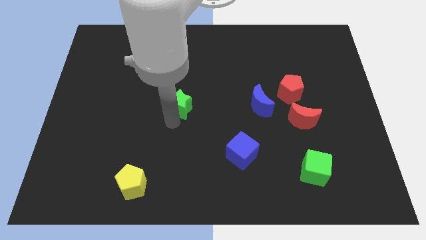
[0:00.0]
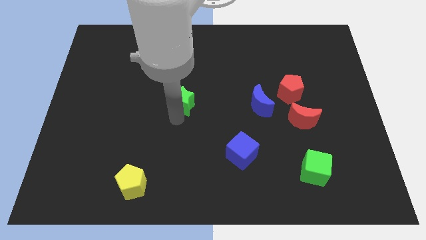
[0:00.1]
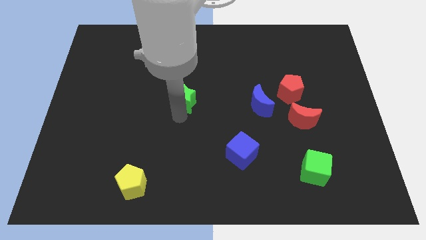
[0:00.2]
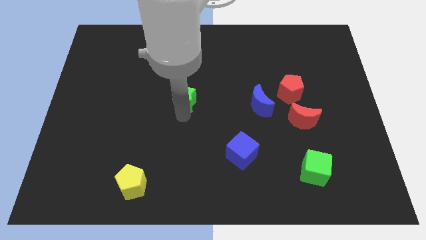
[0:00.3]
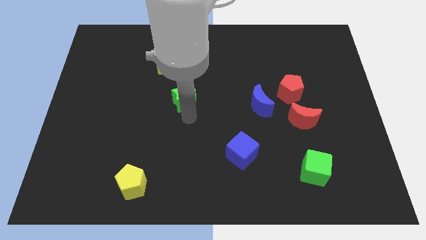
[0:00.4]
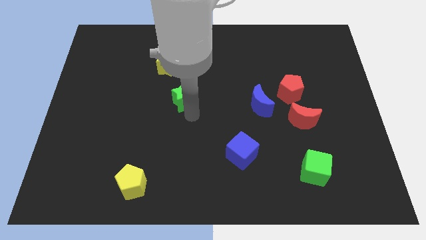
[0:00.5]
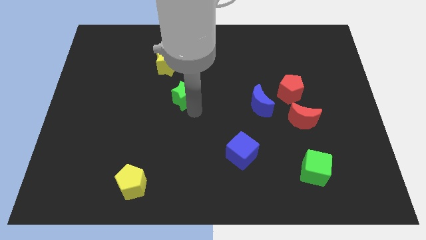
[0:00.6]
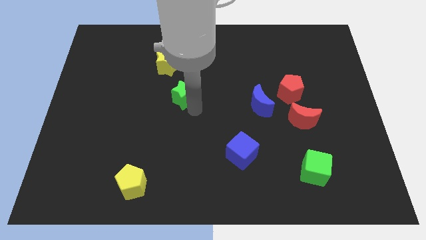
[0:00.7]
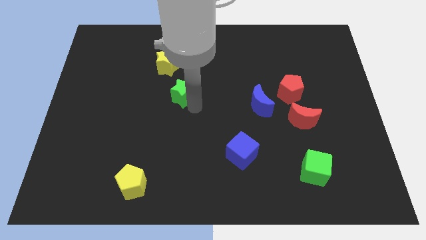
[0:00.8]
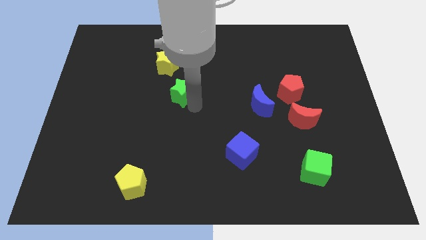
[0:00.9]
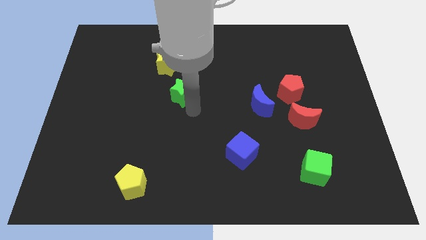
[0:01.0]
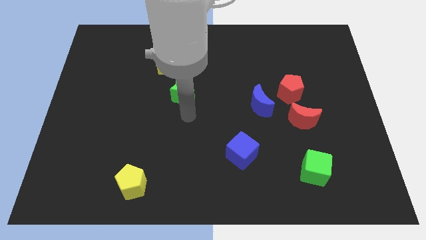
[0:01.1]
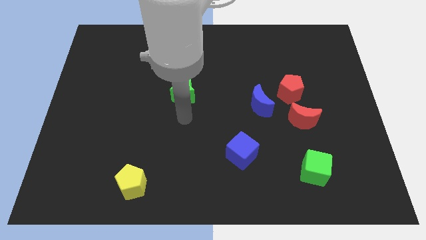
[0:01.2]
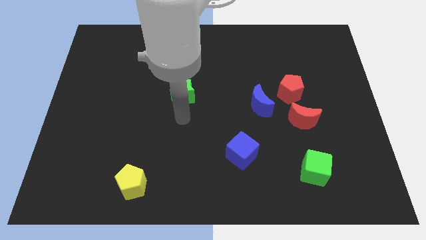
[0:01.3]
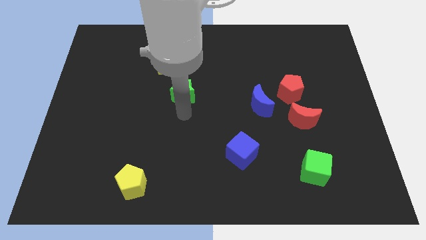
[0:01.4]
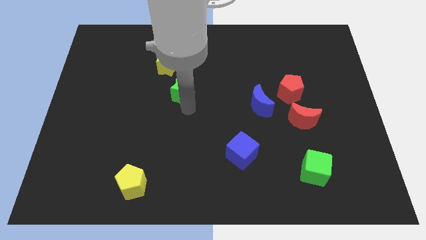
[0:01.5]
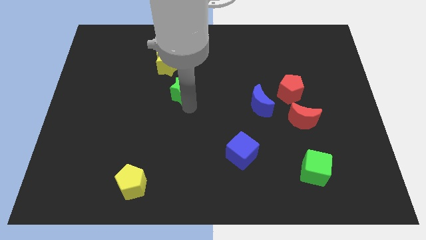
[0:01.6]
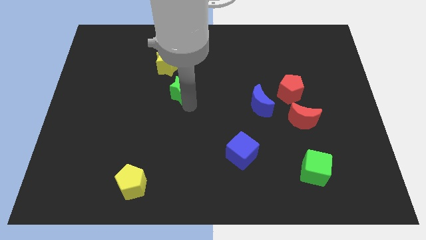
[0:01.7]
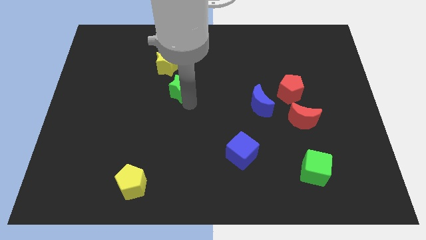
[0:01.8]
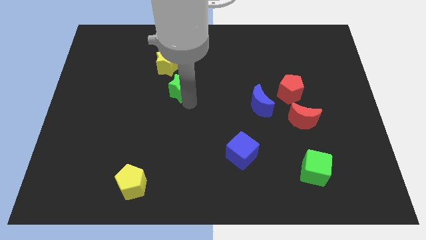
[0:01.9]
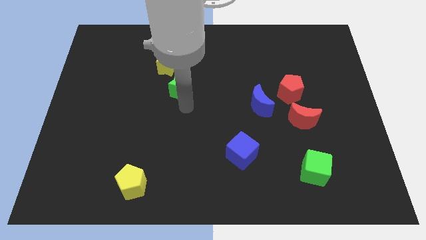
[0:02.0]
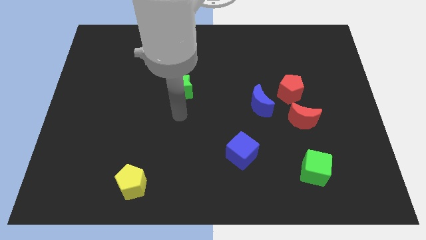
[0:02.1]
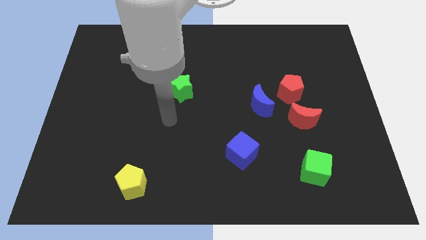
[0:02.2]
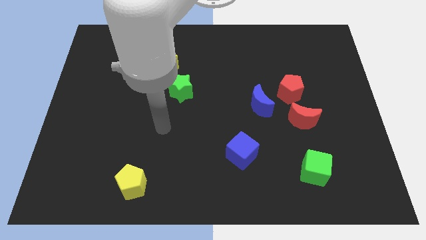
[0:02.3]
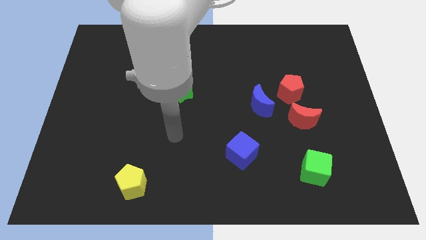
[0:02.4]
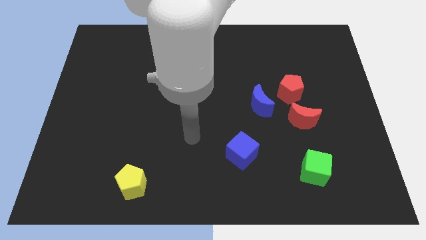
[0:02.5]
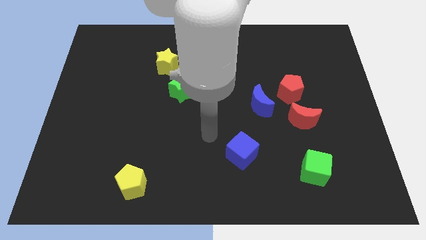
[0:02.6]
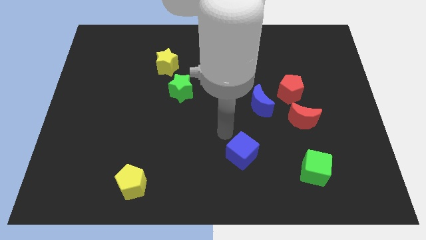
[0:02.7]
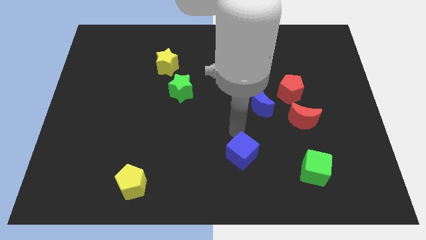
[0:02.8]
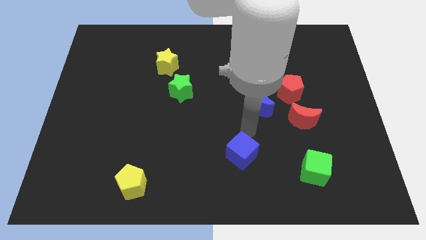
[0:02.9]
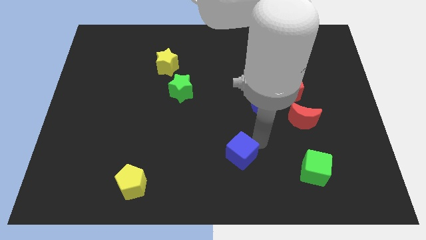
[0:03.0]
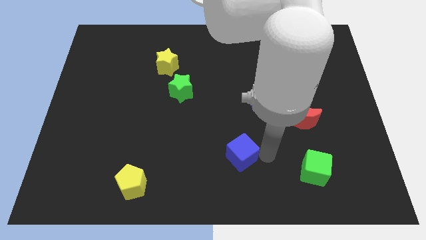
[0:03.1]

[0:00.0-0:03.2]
push the green star close to the yellow star

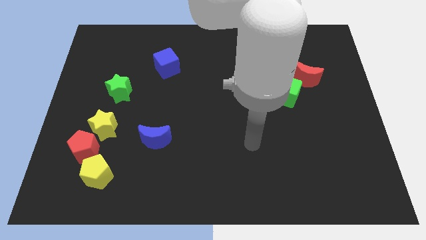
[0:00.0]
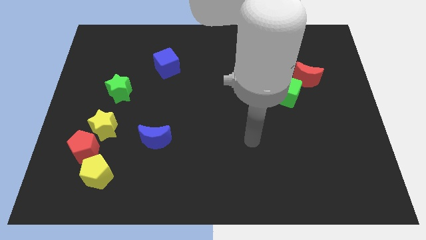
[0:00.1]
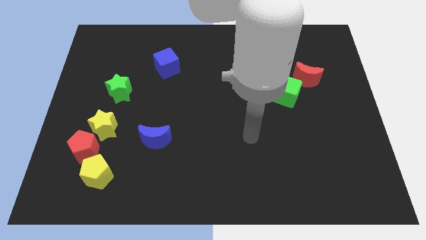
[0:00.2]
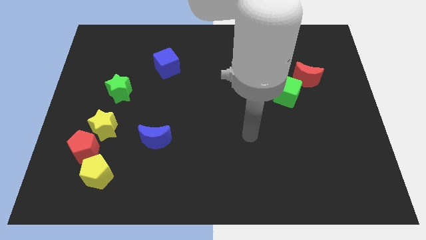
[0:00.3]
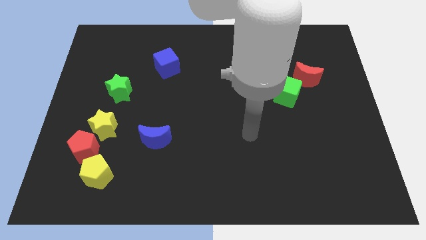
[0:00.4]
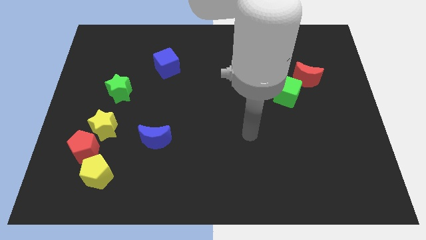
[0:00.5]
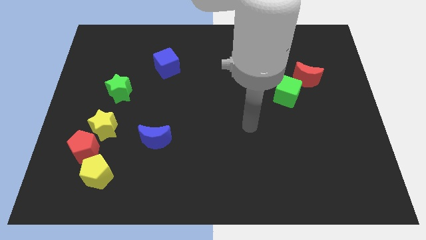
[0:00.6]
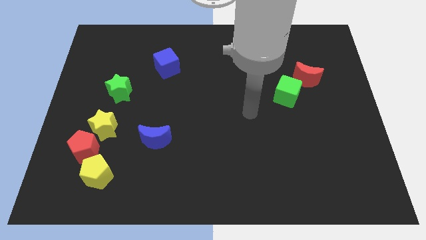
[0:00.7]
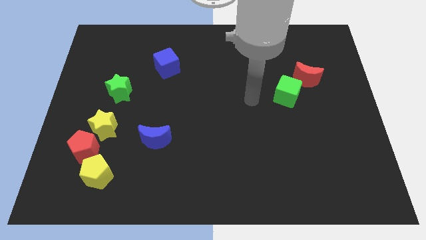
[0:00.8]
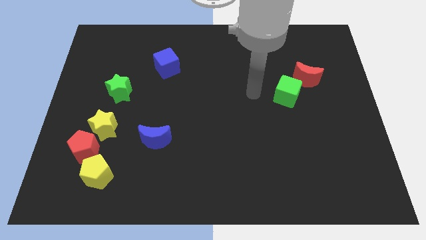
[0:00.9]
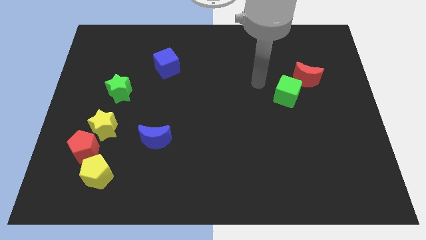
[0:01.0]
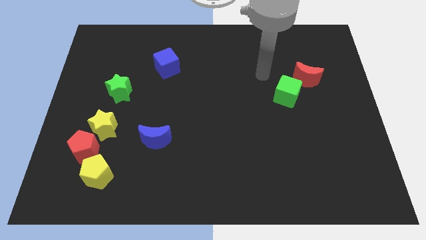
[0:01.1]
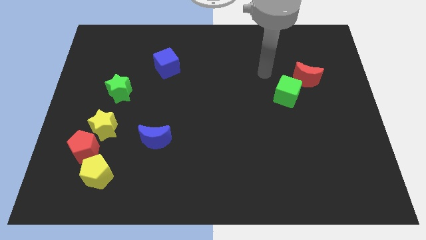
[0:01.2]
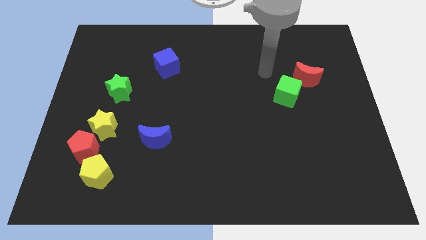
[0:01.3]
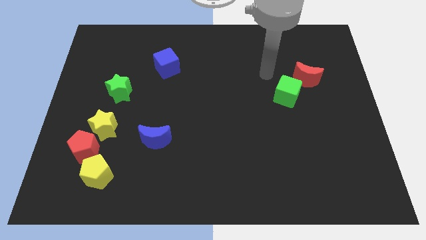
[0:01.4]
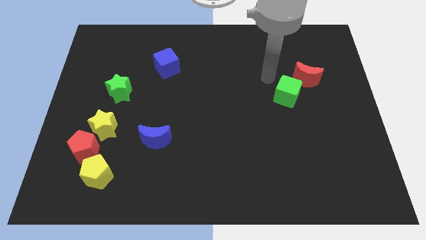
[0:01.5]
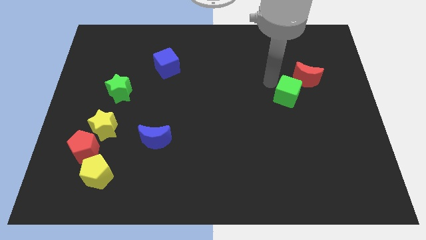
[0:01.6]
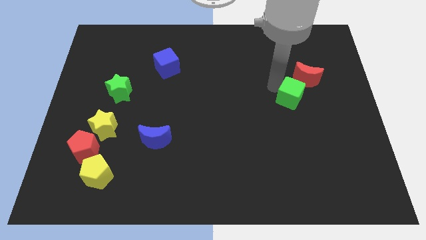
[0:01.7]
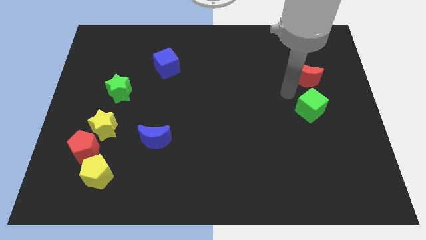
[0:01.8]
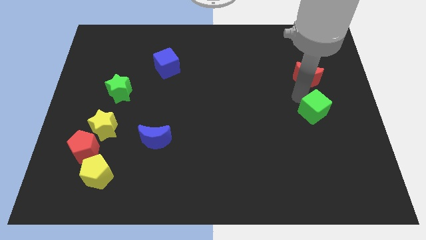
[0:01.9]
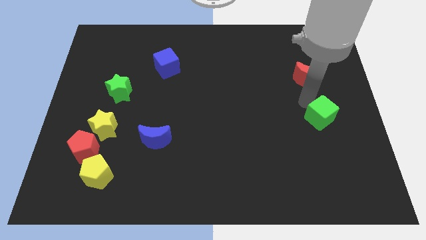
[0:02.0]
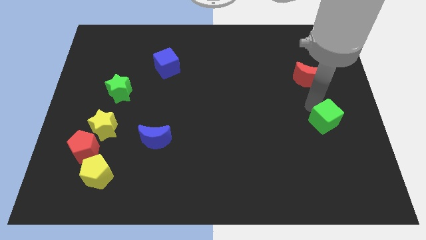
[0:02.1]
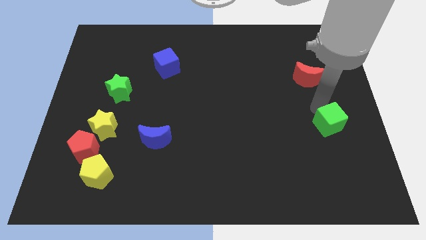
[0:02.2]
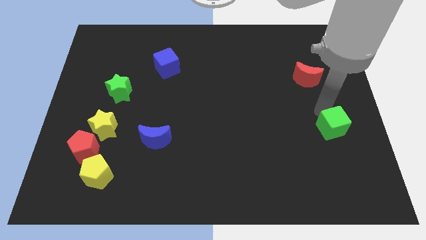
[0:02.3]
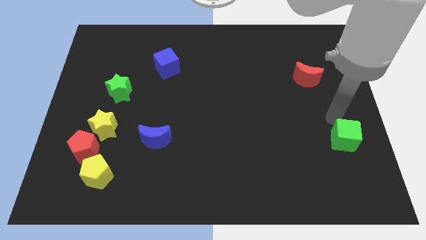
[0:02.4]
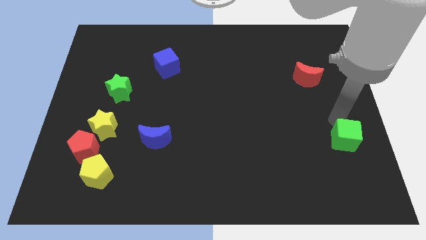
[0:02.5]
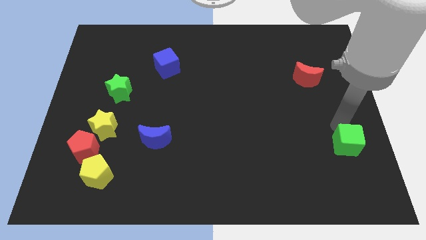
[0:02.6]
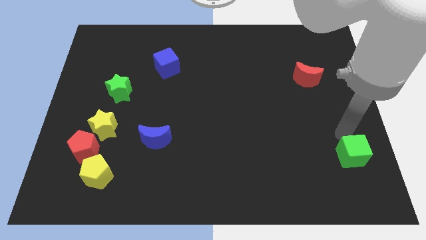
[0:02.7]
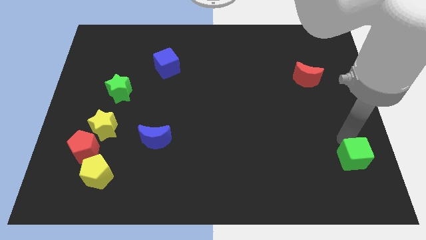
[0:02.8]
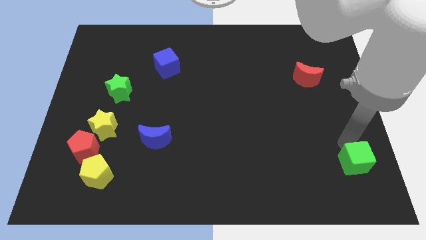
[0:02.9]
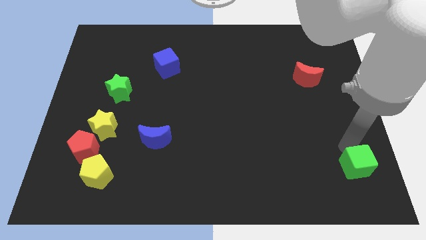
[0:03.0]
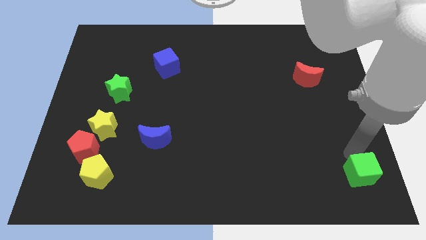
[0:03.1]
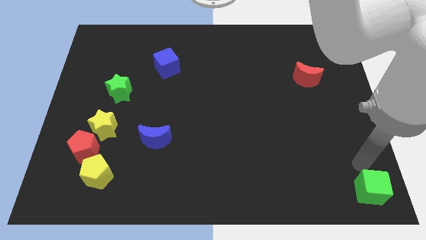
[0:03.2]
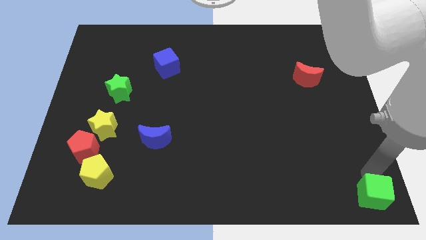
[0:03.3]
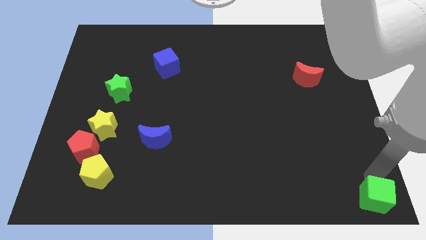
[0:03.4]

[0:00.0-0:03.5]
push the green block

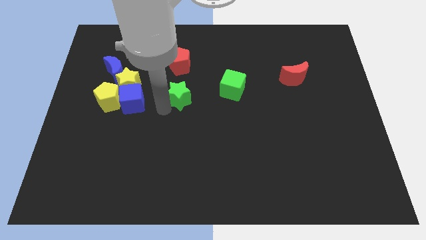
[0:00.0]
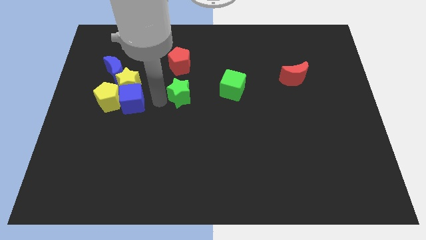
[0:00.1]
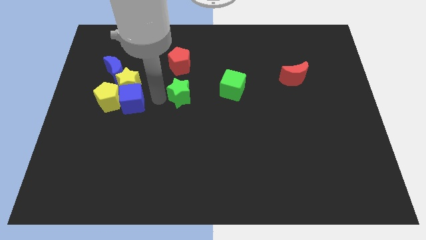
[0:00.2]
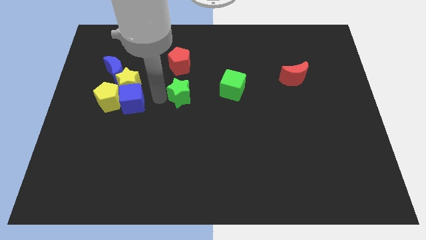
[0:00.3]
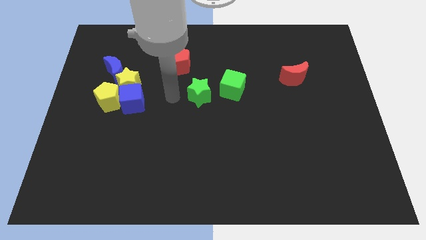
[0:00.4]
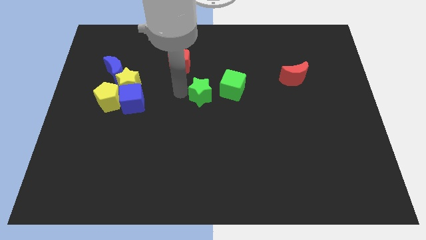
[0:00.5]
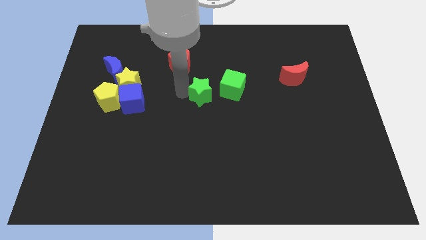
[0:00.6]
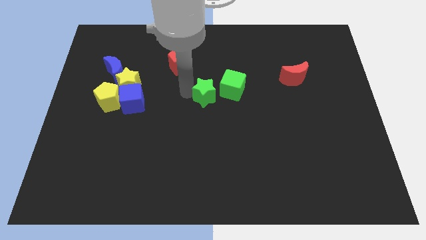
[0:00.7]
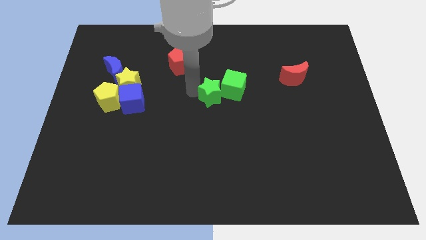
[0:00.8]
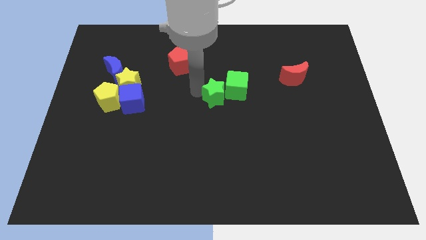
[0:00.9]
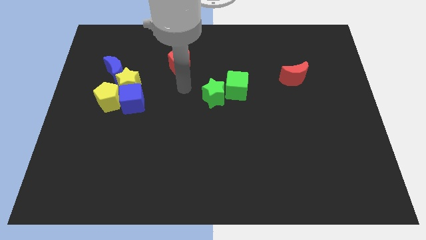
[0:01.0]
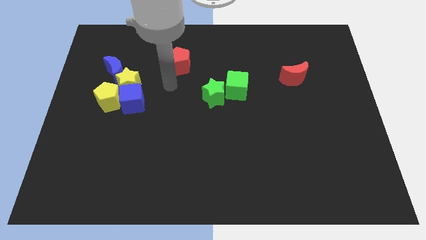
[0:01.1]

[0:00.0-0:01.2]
place green star to the bottom left of the green cube

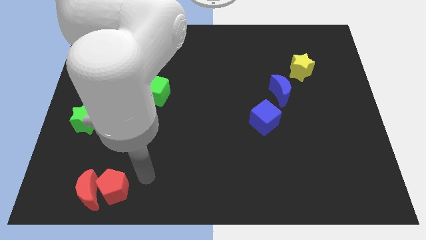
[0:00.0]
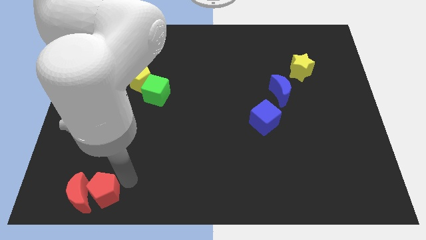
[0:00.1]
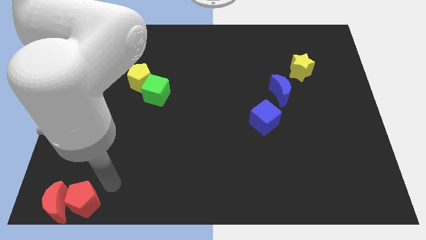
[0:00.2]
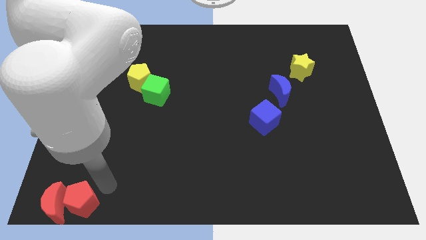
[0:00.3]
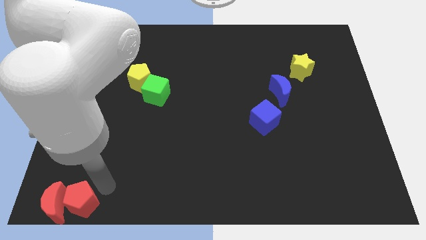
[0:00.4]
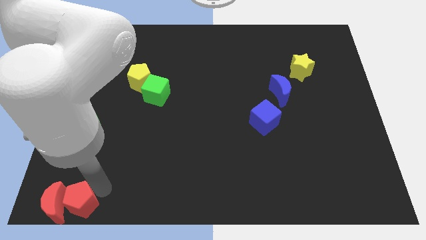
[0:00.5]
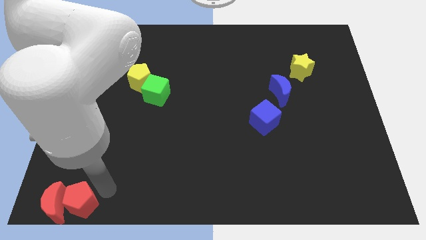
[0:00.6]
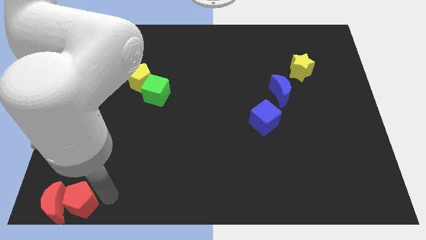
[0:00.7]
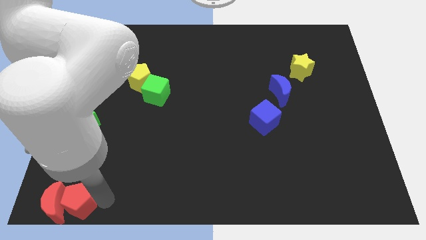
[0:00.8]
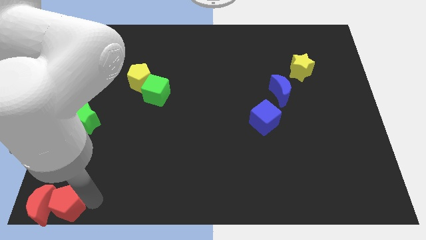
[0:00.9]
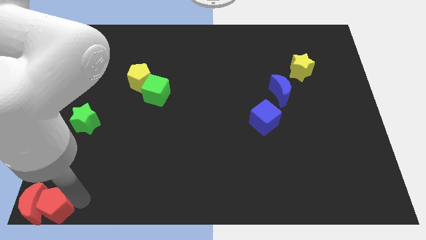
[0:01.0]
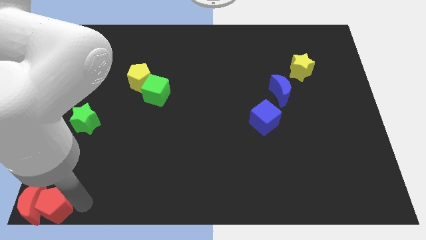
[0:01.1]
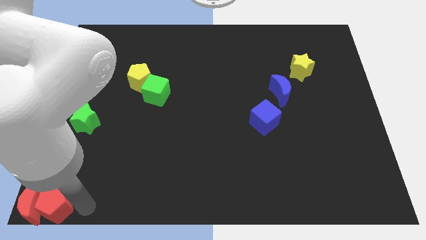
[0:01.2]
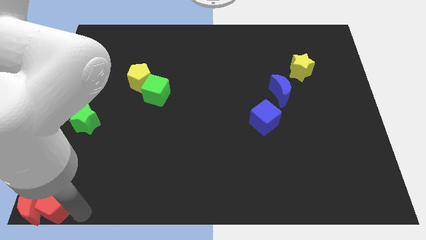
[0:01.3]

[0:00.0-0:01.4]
place red moon and red pentagon to the bottom left corner of the board
